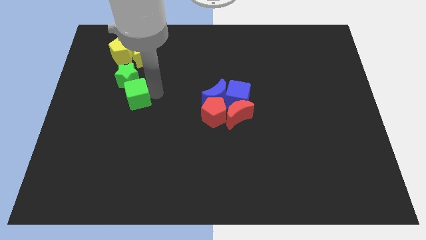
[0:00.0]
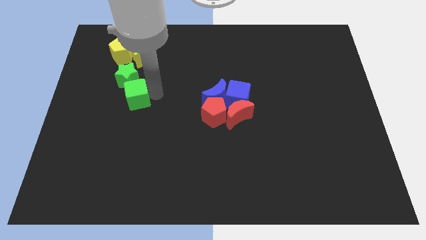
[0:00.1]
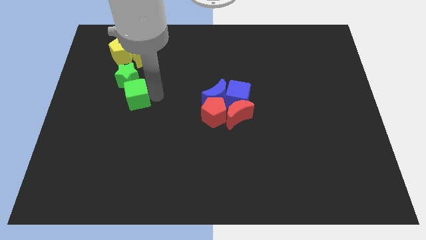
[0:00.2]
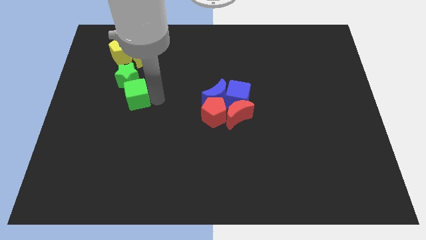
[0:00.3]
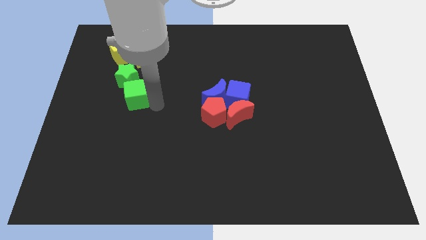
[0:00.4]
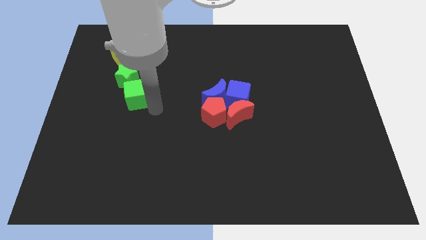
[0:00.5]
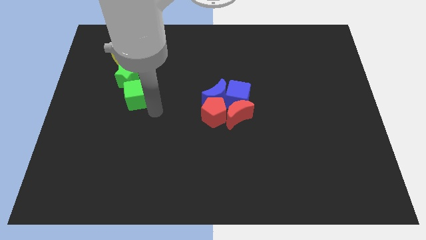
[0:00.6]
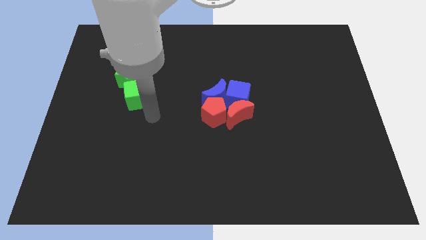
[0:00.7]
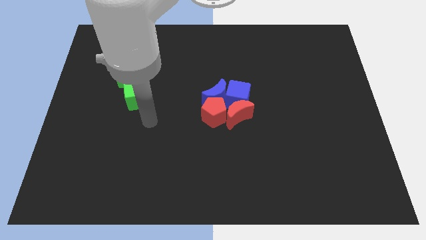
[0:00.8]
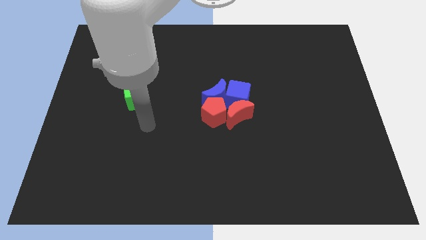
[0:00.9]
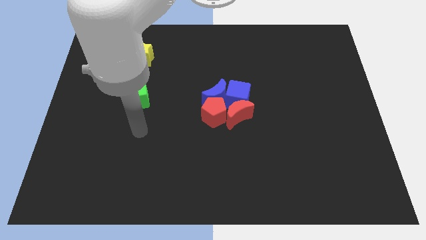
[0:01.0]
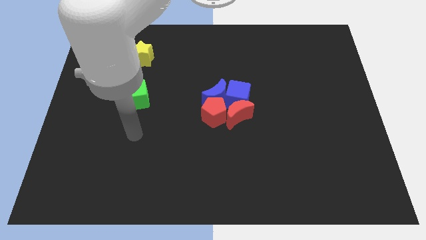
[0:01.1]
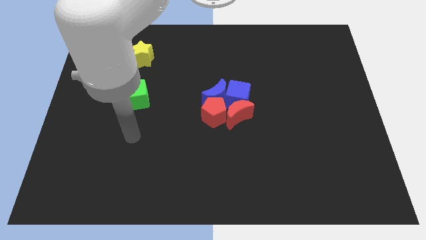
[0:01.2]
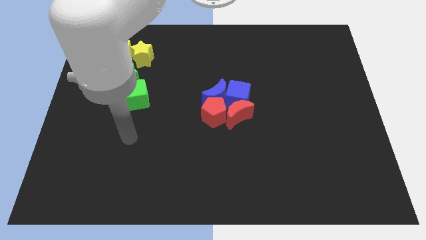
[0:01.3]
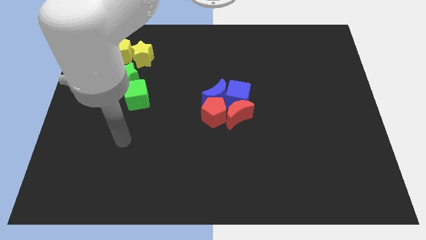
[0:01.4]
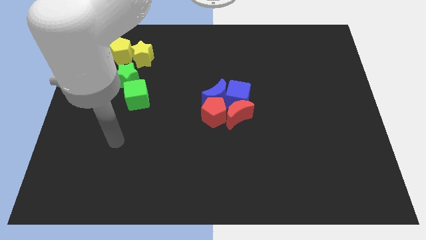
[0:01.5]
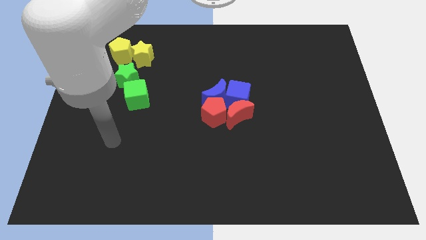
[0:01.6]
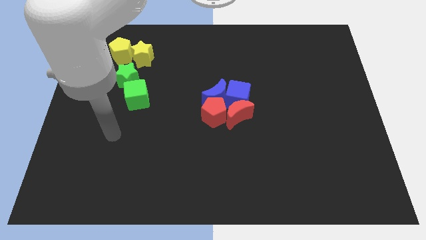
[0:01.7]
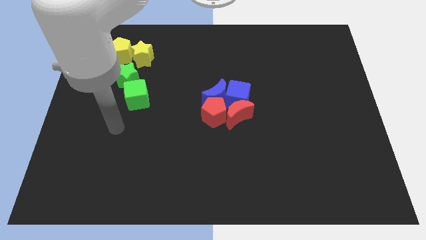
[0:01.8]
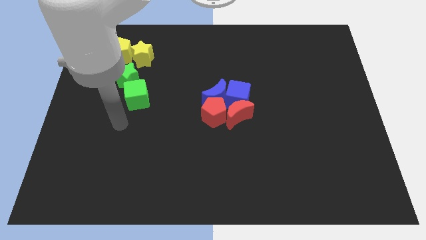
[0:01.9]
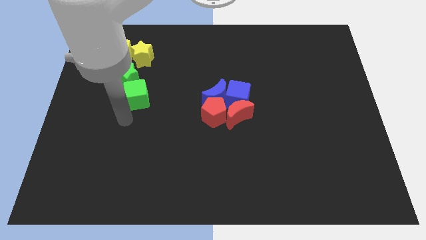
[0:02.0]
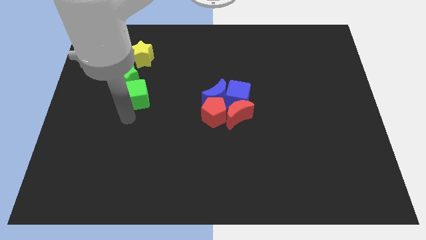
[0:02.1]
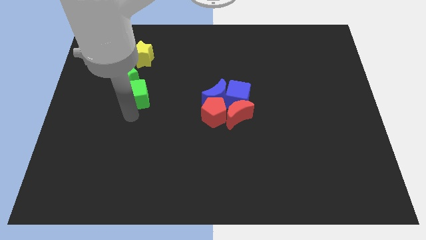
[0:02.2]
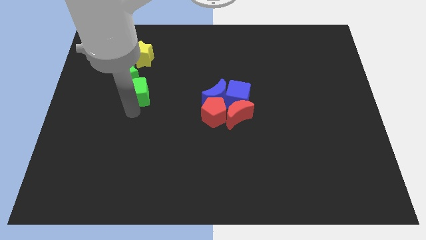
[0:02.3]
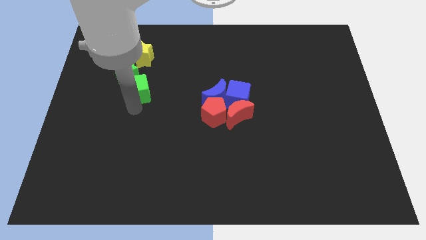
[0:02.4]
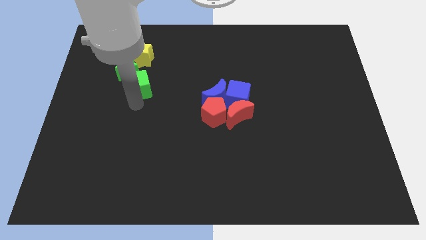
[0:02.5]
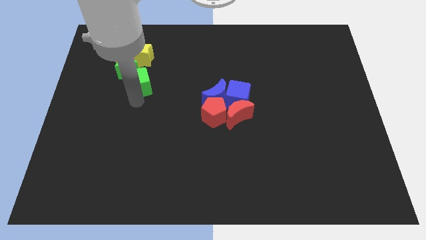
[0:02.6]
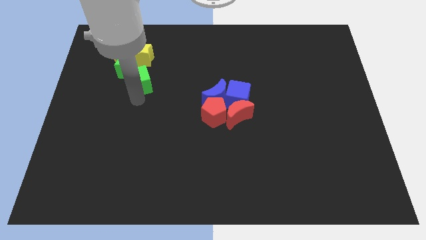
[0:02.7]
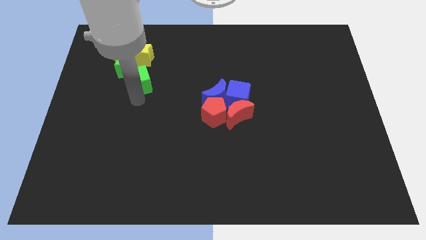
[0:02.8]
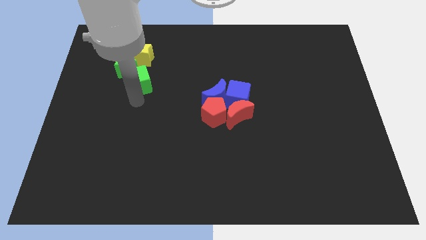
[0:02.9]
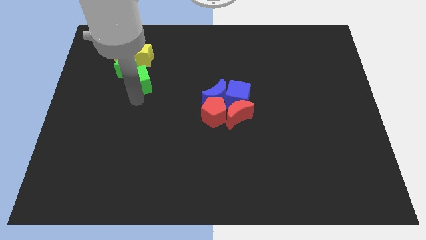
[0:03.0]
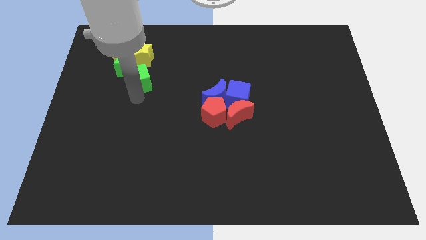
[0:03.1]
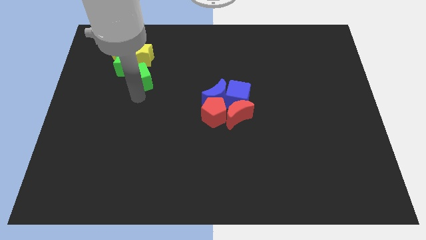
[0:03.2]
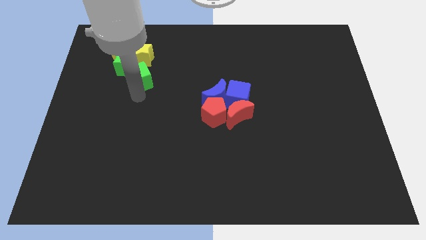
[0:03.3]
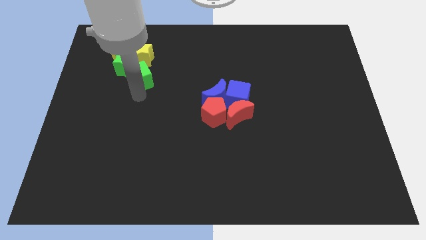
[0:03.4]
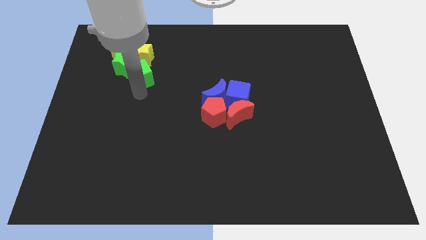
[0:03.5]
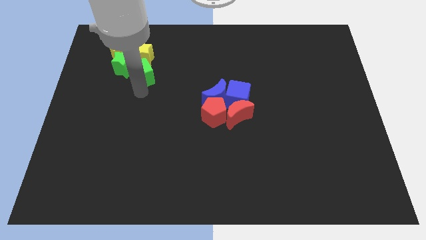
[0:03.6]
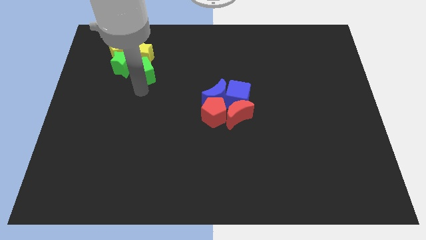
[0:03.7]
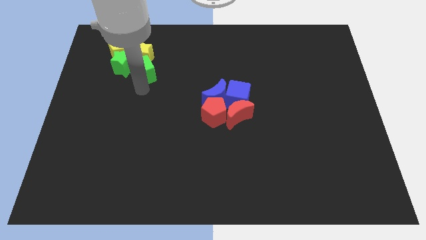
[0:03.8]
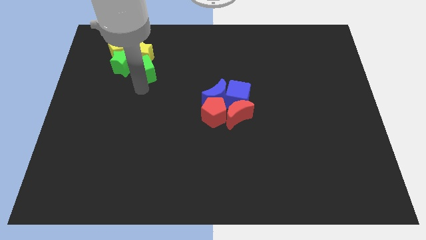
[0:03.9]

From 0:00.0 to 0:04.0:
push the green cube to the right of the green star

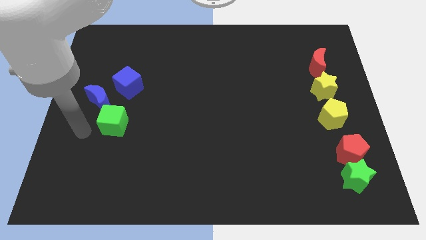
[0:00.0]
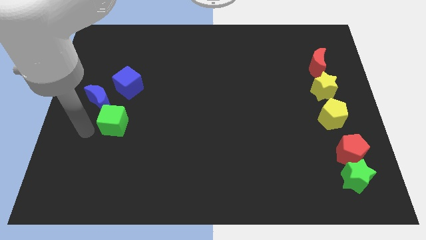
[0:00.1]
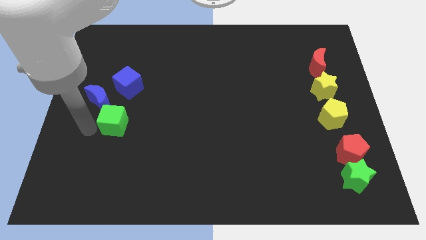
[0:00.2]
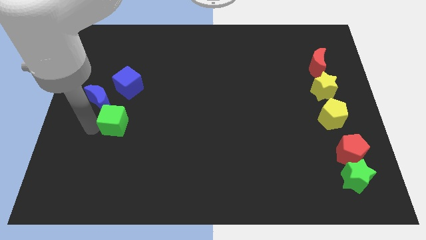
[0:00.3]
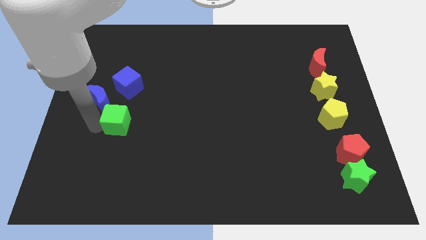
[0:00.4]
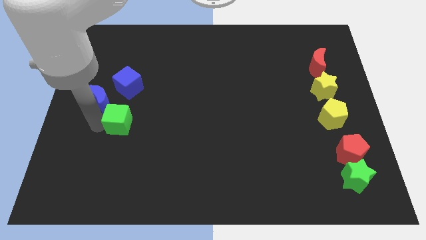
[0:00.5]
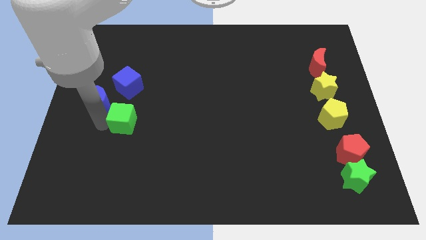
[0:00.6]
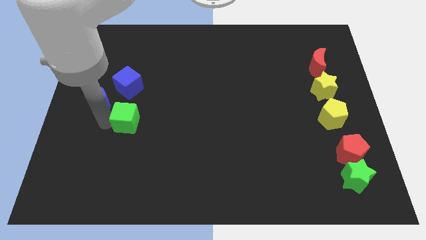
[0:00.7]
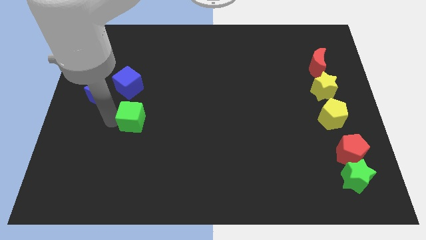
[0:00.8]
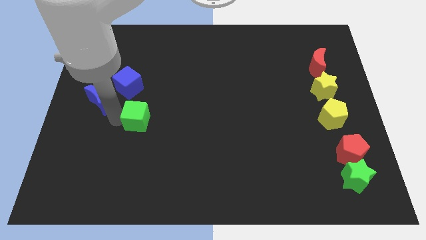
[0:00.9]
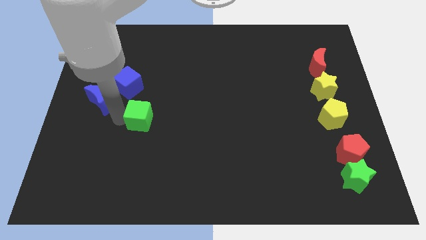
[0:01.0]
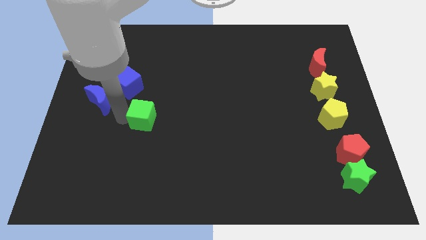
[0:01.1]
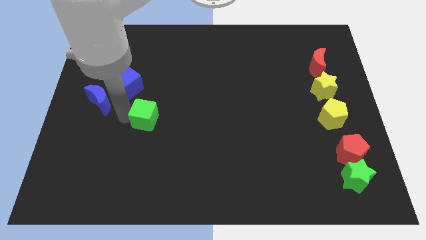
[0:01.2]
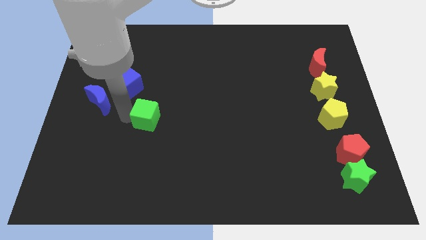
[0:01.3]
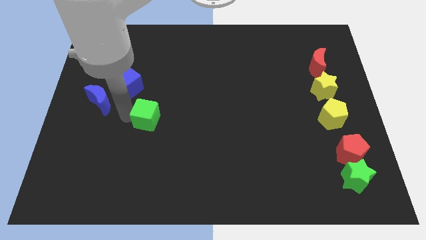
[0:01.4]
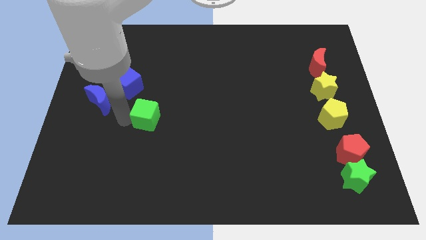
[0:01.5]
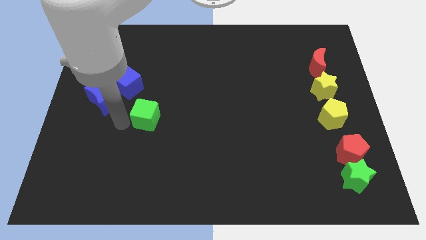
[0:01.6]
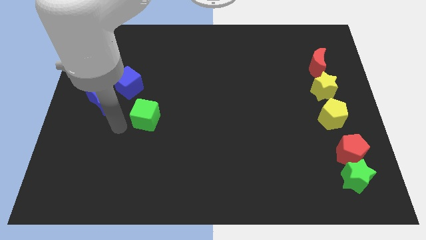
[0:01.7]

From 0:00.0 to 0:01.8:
separate the green cube from the blue crescent

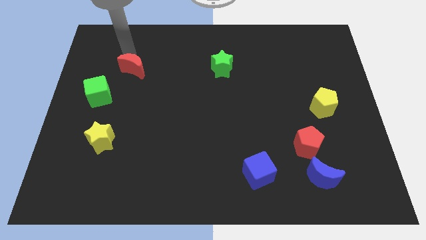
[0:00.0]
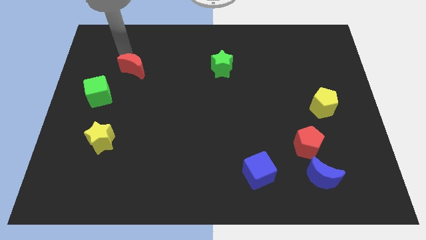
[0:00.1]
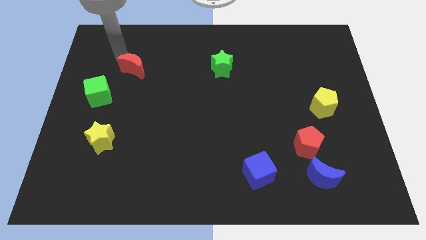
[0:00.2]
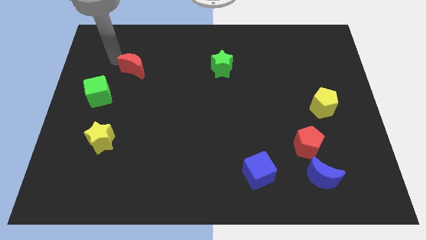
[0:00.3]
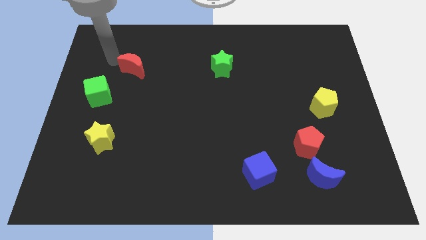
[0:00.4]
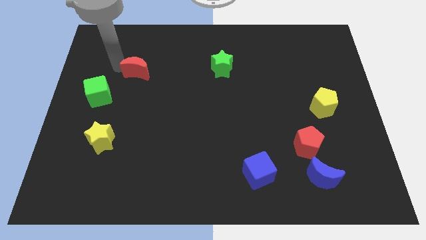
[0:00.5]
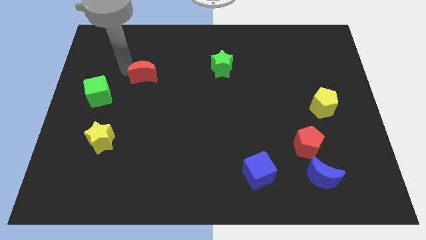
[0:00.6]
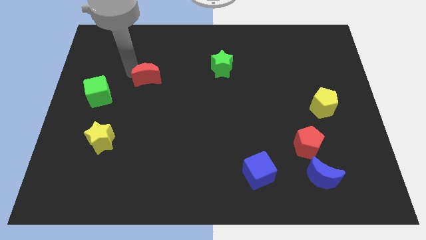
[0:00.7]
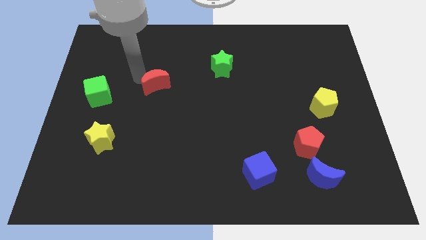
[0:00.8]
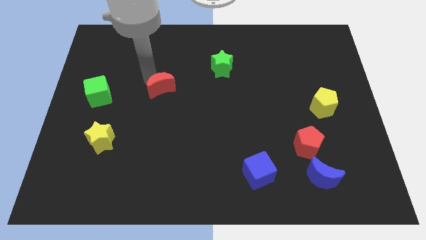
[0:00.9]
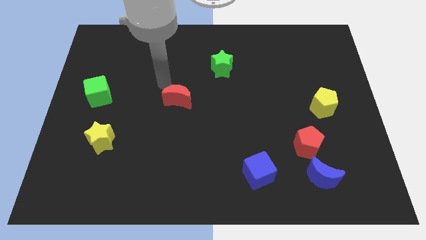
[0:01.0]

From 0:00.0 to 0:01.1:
move the red crescent to the right of the green cube

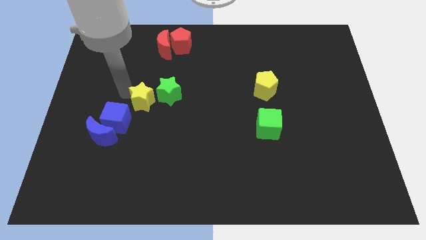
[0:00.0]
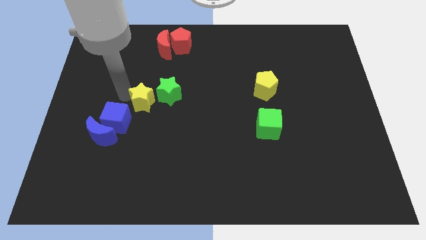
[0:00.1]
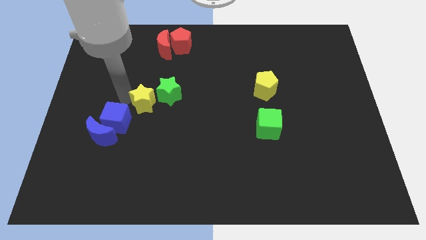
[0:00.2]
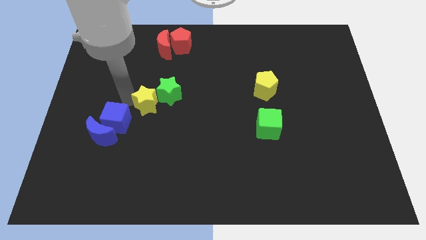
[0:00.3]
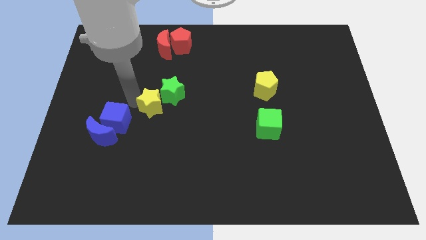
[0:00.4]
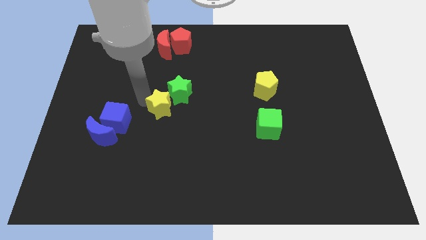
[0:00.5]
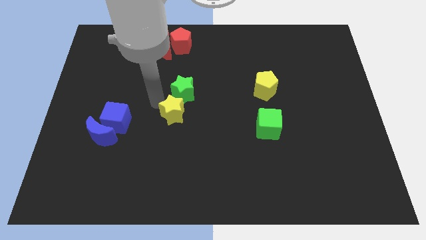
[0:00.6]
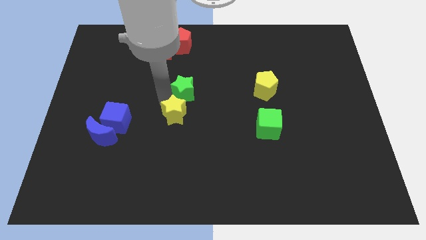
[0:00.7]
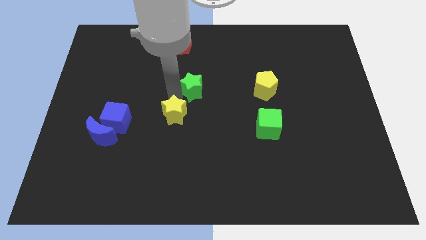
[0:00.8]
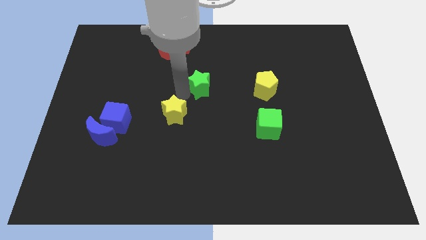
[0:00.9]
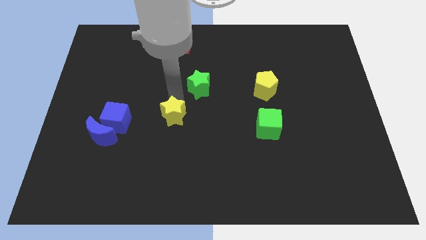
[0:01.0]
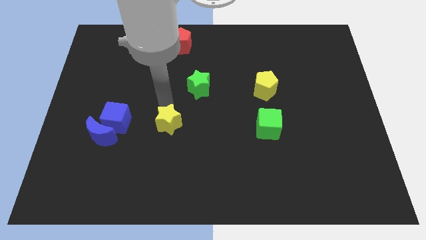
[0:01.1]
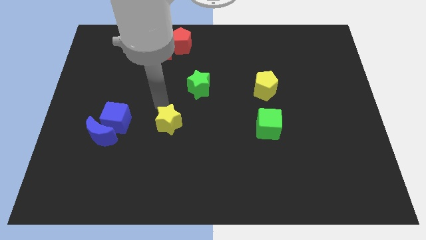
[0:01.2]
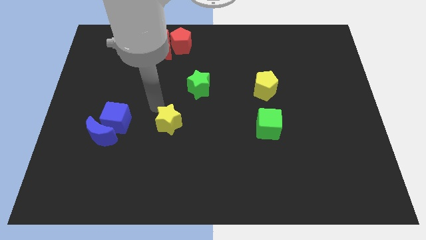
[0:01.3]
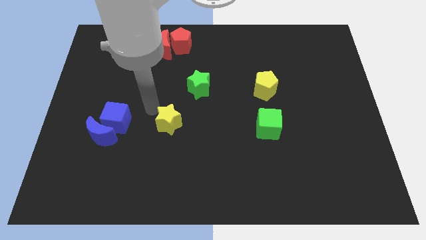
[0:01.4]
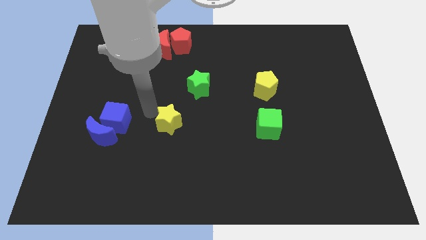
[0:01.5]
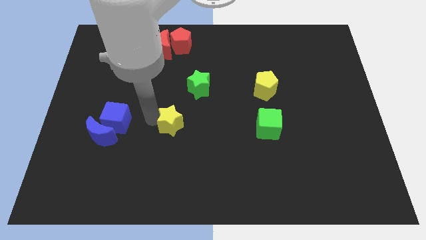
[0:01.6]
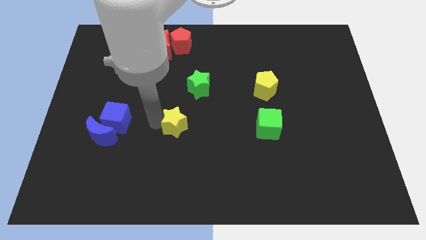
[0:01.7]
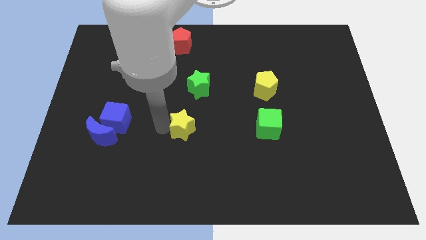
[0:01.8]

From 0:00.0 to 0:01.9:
separate the yellow star to the right of the blue cube

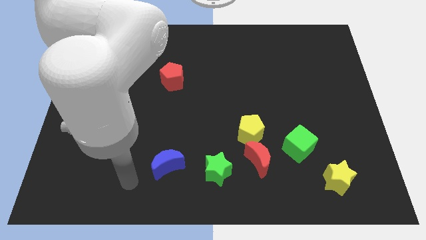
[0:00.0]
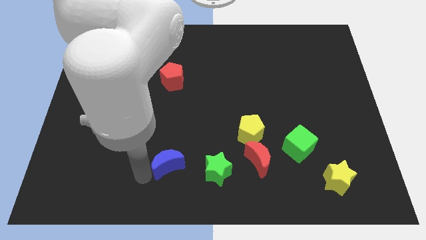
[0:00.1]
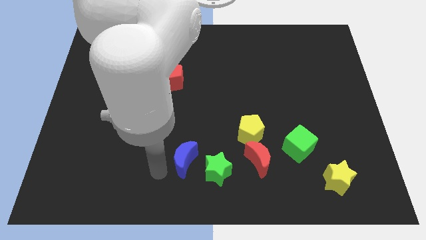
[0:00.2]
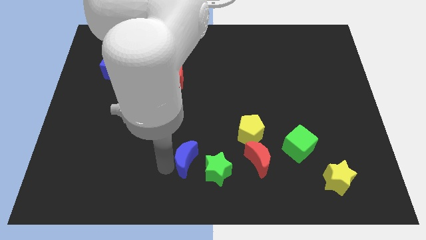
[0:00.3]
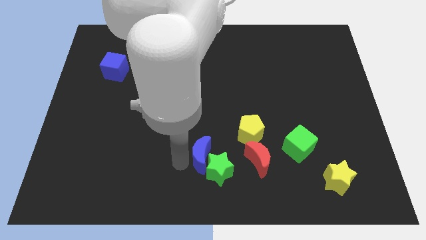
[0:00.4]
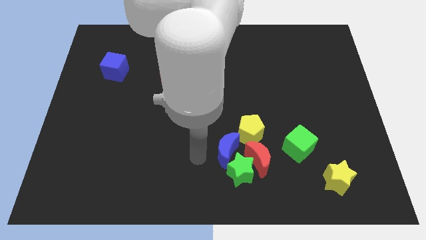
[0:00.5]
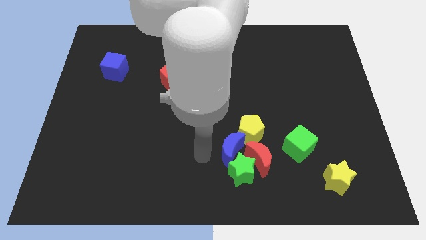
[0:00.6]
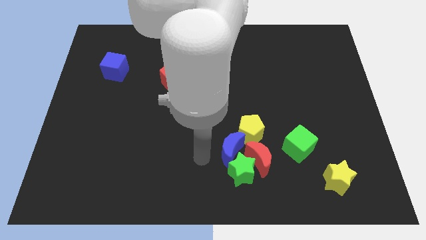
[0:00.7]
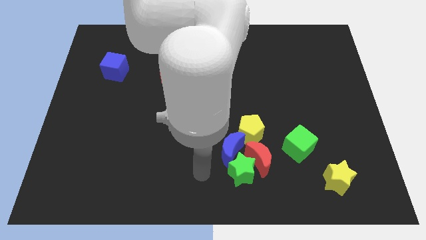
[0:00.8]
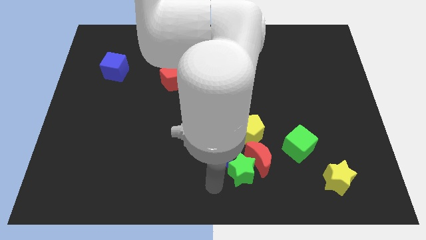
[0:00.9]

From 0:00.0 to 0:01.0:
push the blue crescent closer to the group of blocks
